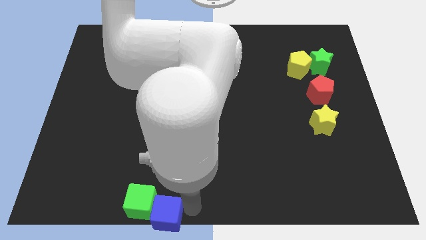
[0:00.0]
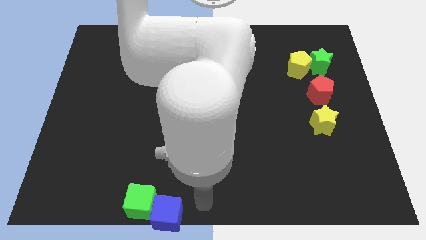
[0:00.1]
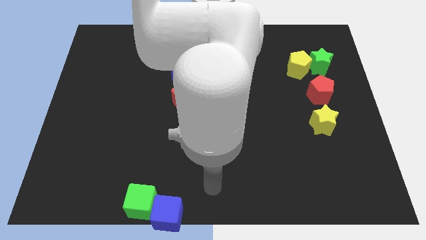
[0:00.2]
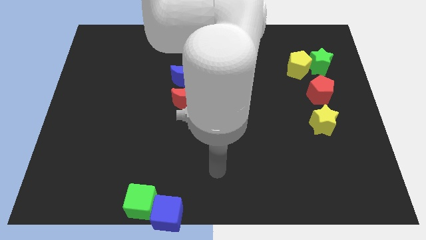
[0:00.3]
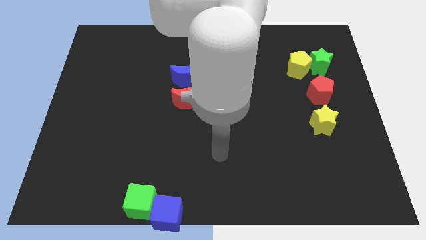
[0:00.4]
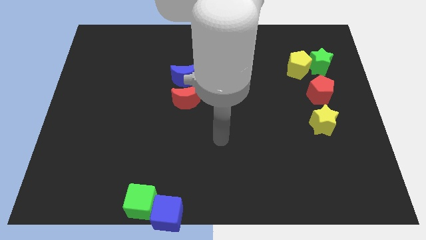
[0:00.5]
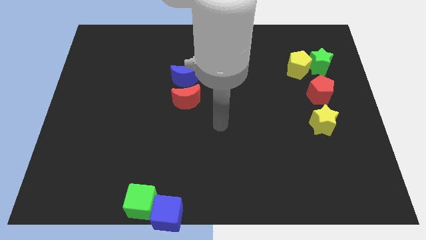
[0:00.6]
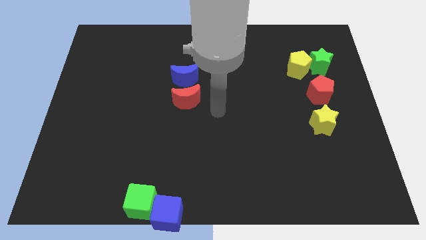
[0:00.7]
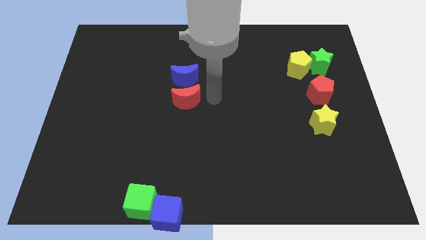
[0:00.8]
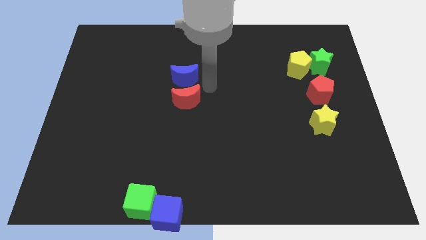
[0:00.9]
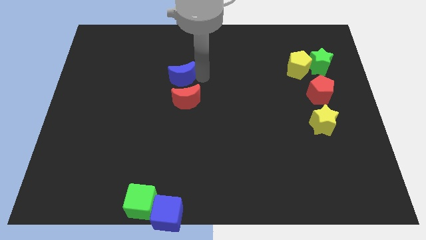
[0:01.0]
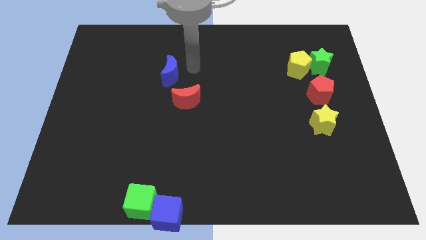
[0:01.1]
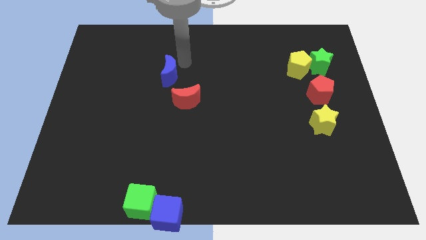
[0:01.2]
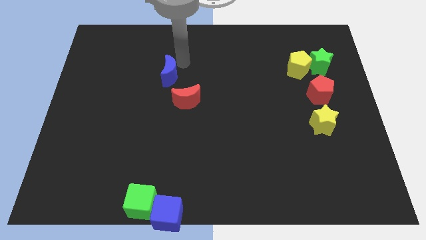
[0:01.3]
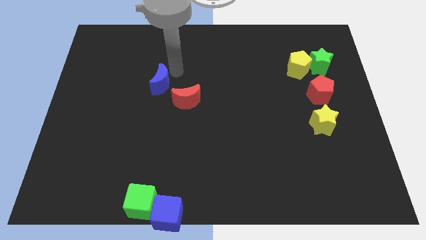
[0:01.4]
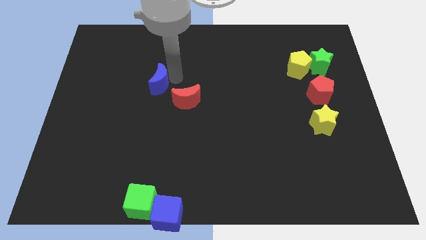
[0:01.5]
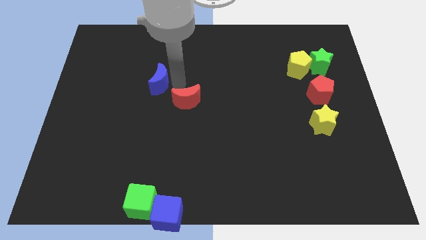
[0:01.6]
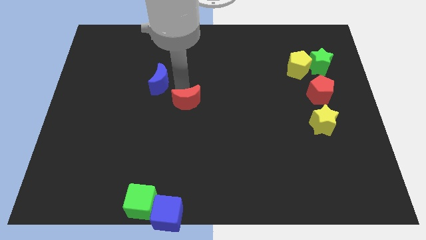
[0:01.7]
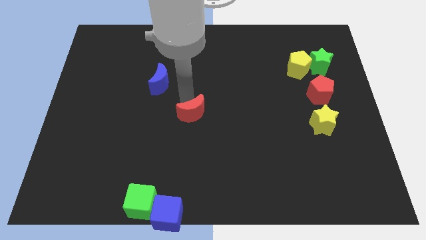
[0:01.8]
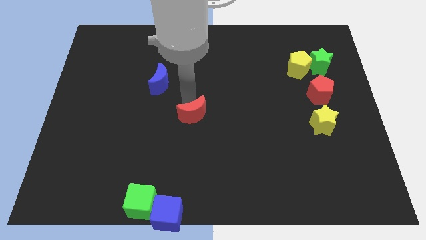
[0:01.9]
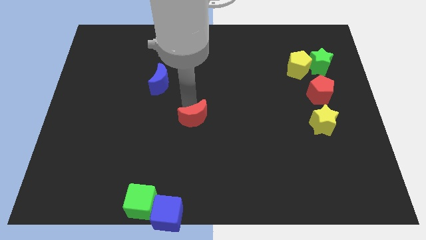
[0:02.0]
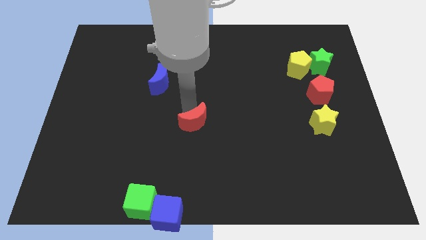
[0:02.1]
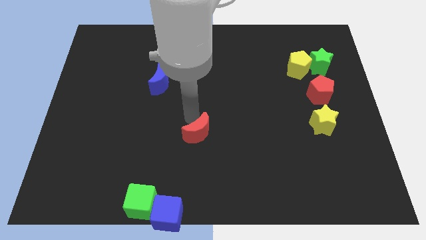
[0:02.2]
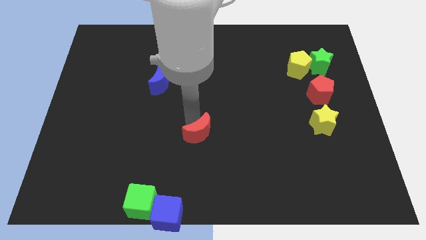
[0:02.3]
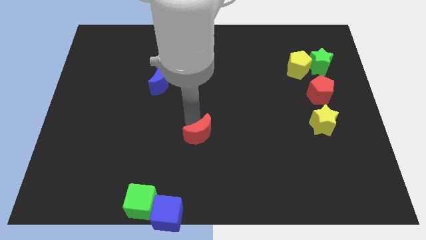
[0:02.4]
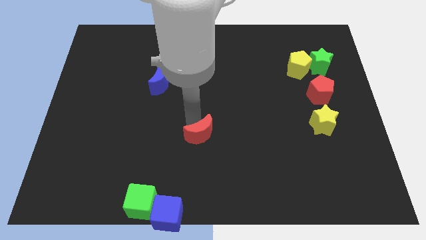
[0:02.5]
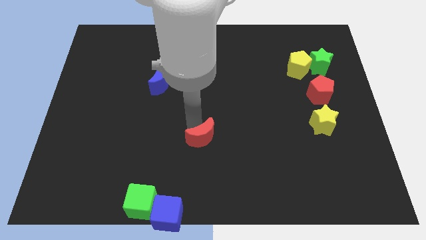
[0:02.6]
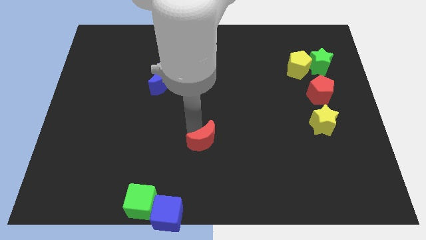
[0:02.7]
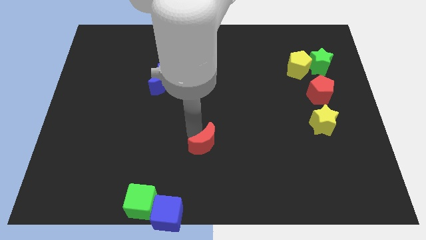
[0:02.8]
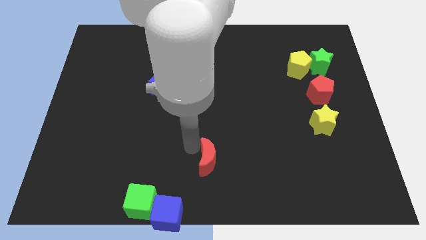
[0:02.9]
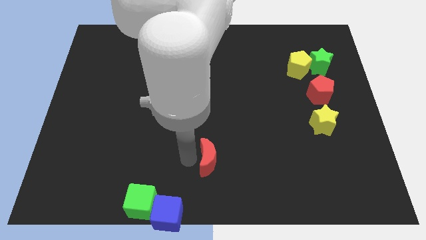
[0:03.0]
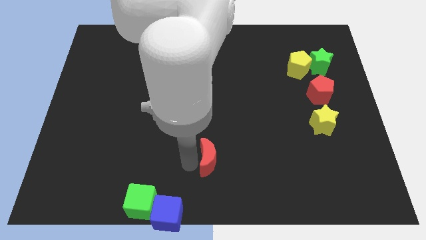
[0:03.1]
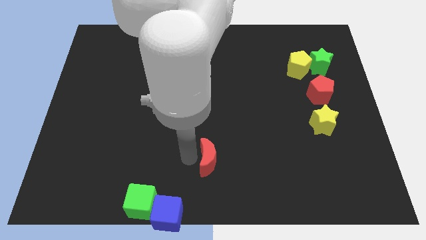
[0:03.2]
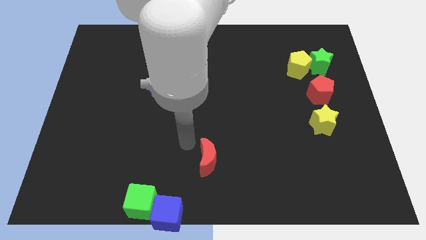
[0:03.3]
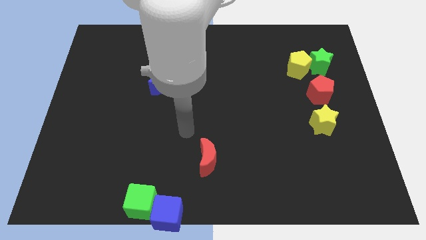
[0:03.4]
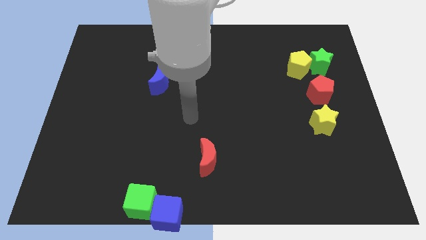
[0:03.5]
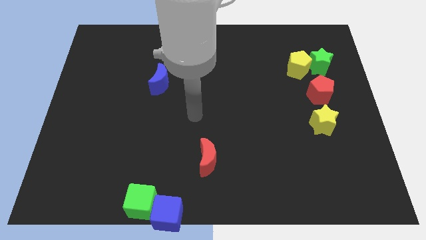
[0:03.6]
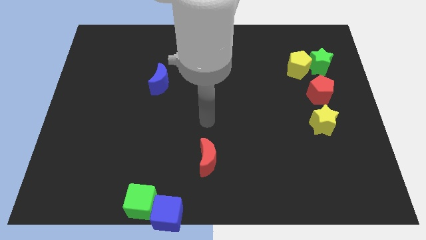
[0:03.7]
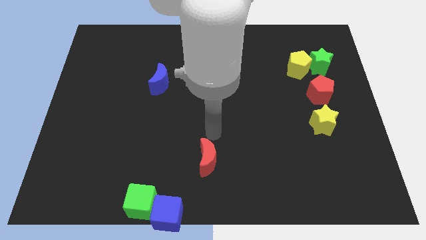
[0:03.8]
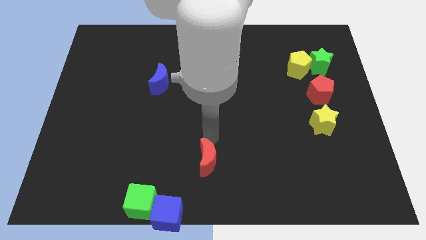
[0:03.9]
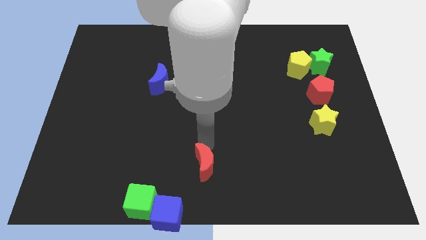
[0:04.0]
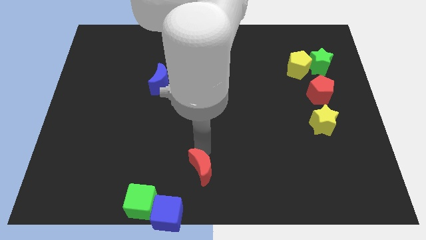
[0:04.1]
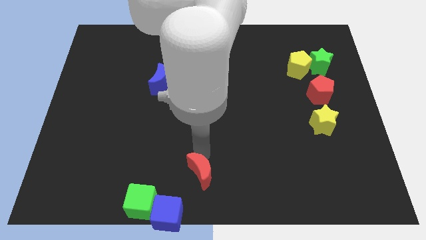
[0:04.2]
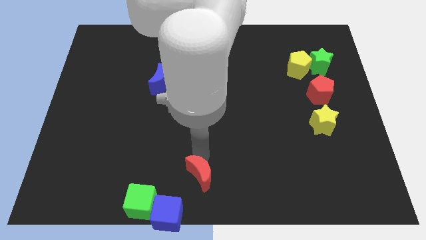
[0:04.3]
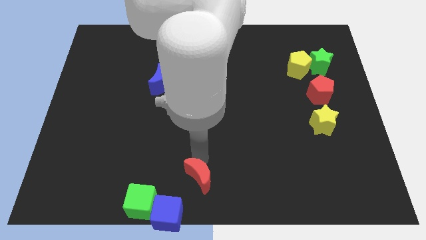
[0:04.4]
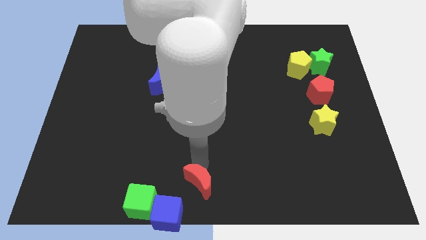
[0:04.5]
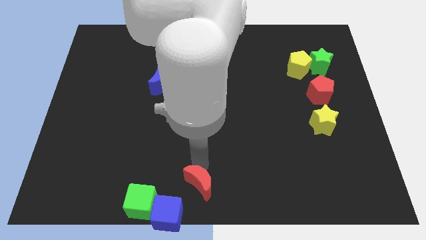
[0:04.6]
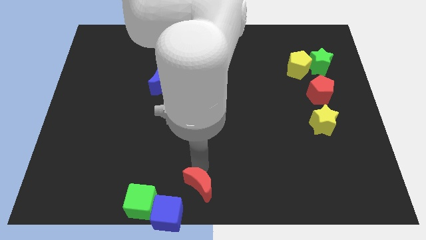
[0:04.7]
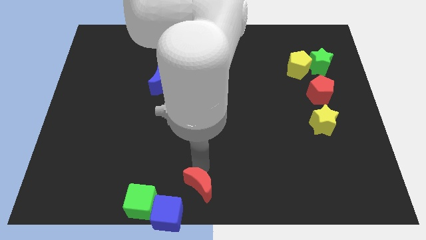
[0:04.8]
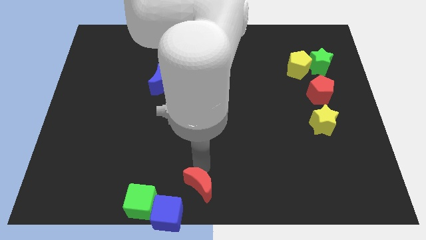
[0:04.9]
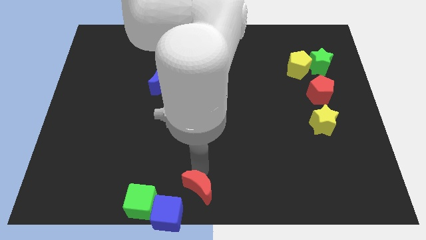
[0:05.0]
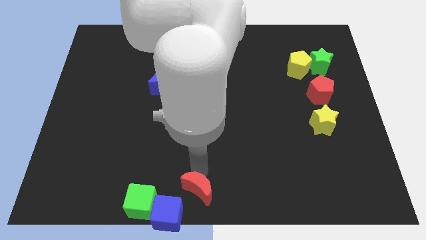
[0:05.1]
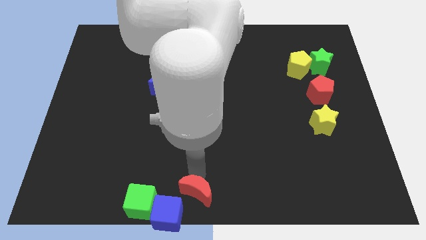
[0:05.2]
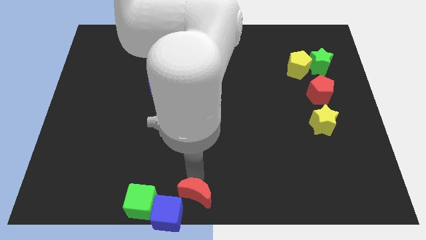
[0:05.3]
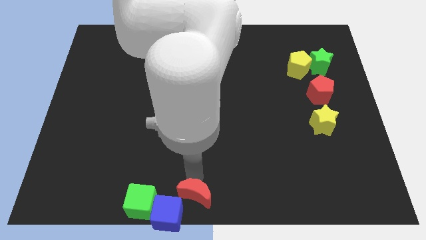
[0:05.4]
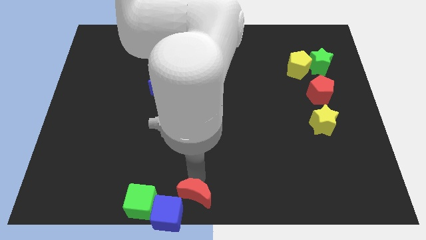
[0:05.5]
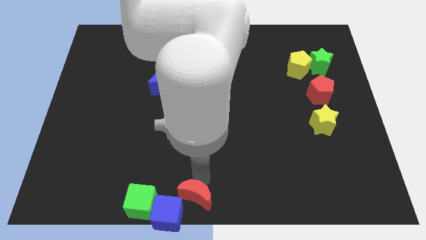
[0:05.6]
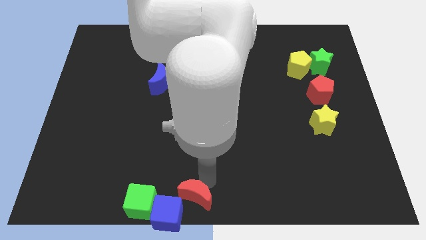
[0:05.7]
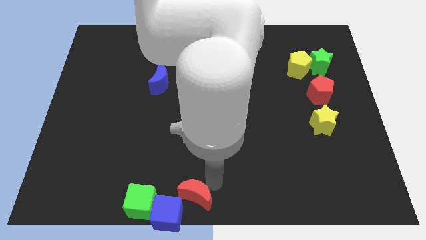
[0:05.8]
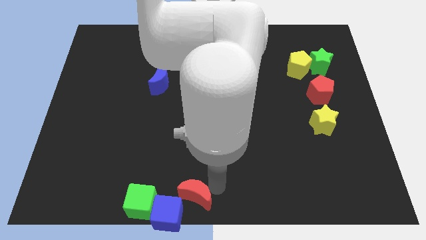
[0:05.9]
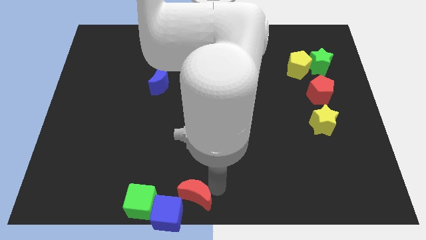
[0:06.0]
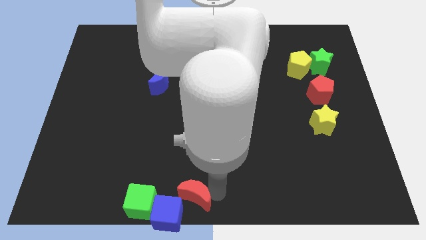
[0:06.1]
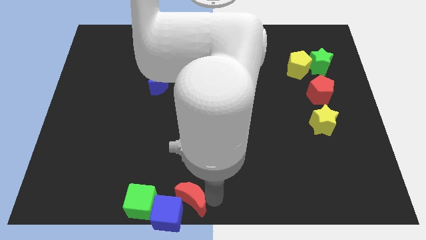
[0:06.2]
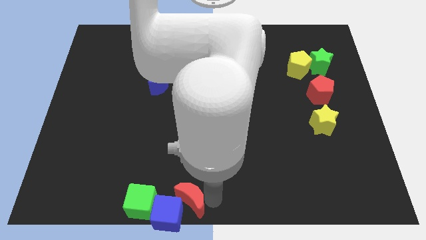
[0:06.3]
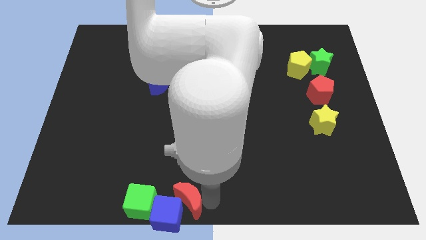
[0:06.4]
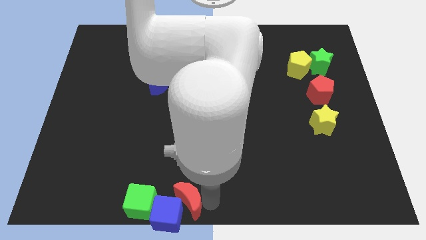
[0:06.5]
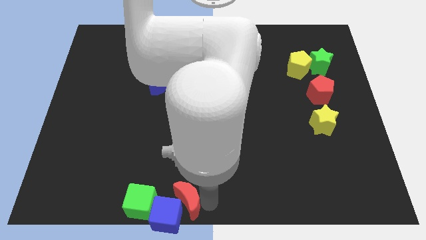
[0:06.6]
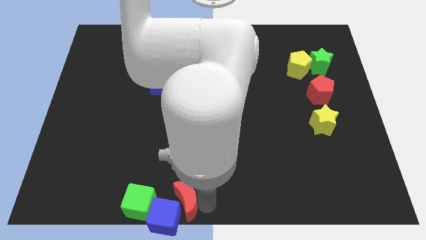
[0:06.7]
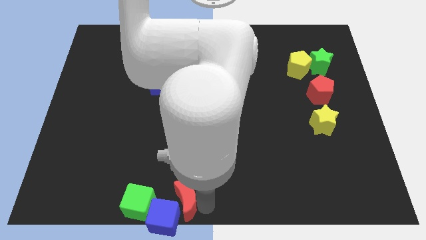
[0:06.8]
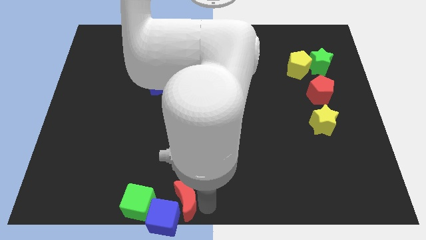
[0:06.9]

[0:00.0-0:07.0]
slide the red crescent into the right side of the blue cube

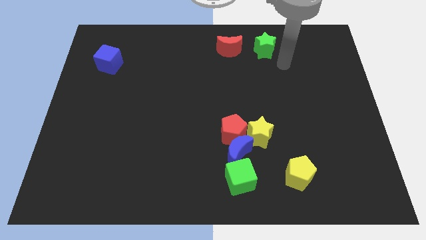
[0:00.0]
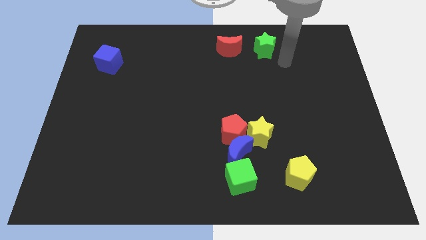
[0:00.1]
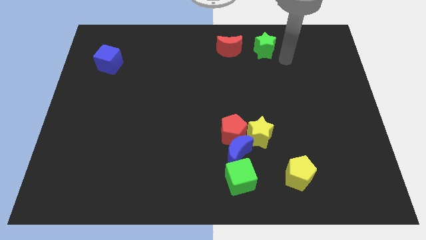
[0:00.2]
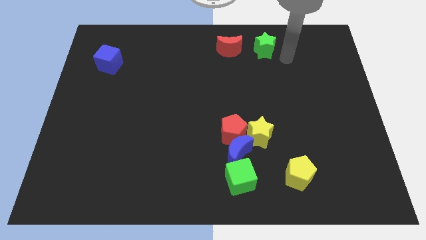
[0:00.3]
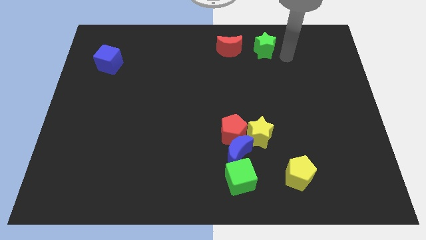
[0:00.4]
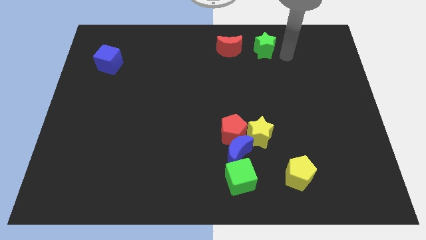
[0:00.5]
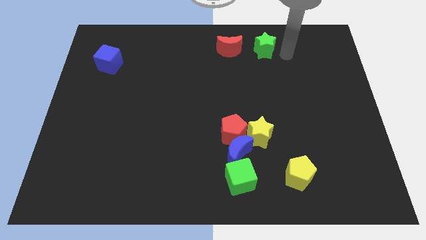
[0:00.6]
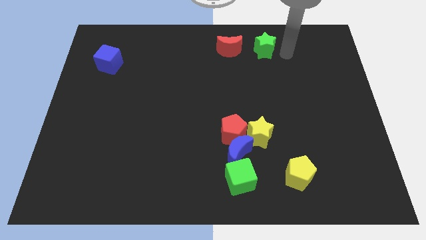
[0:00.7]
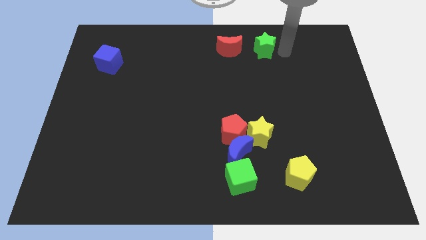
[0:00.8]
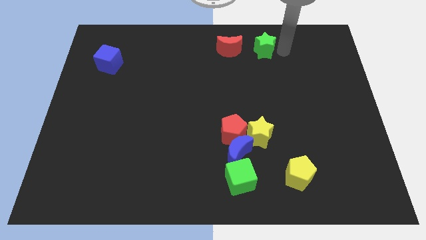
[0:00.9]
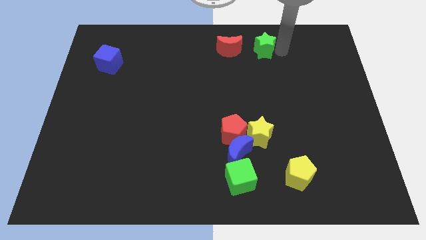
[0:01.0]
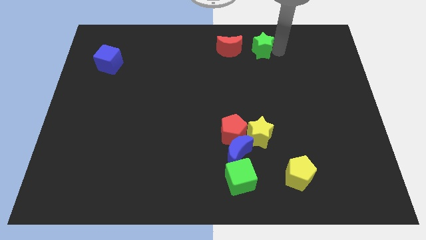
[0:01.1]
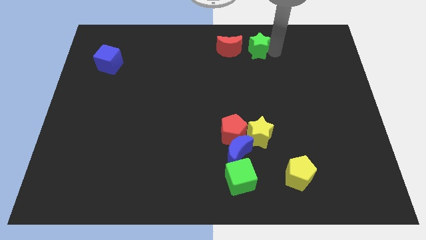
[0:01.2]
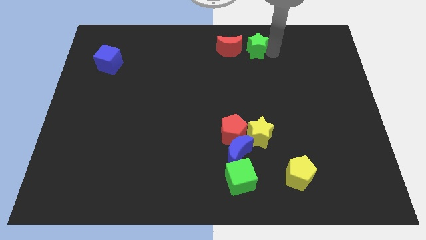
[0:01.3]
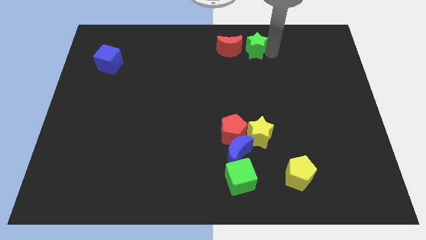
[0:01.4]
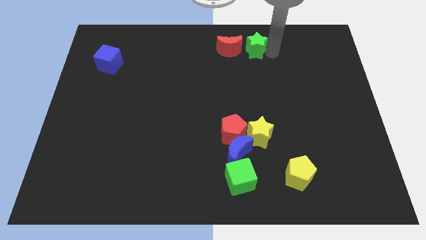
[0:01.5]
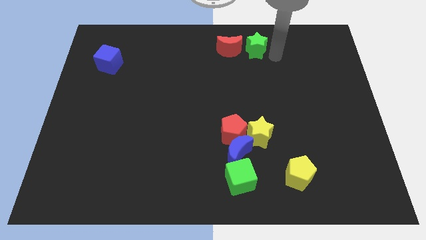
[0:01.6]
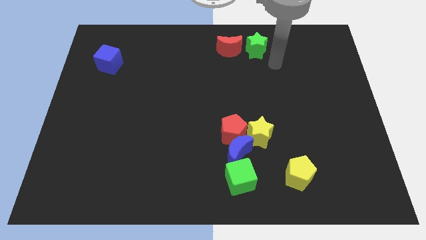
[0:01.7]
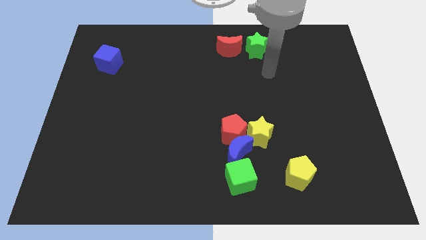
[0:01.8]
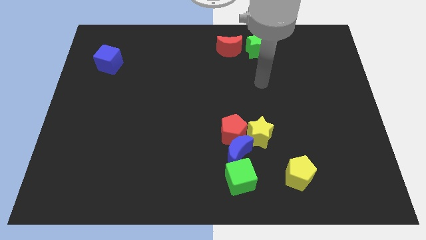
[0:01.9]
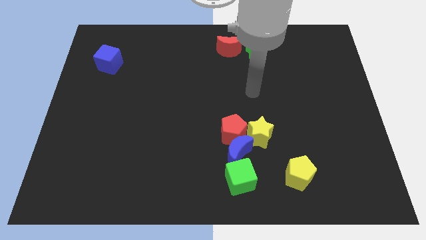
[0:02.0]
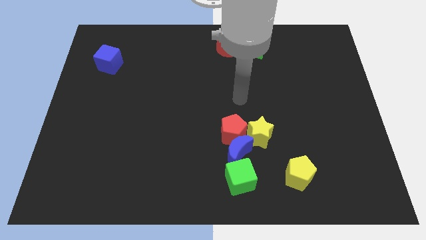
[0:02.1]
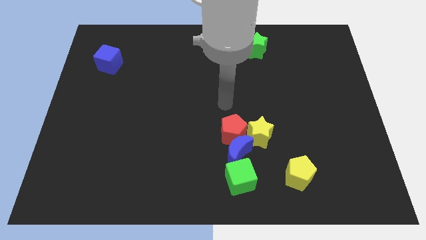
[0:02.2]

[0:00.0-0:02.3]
push green star little more closer to the red crescent
